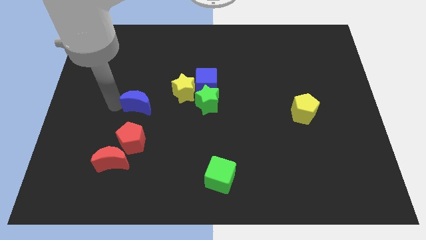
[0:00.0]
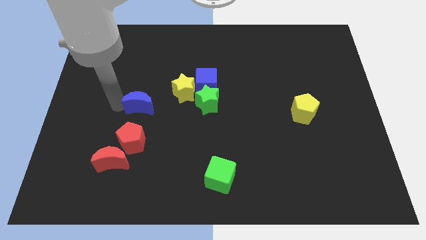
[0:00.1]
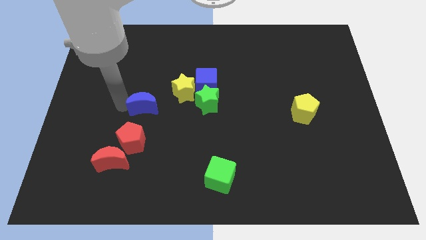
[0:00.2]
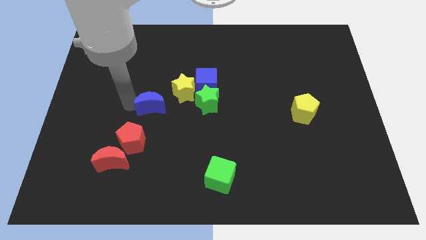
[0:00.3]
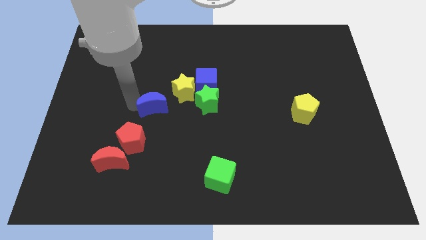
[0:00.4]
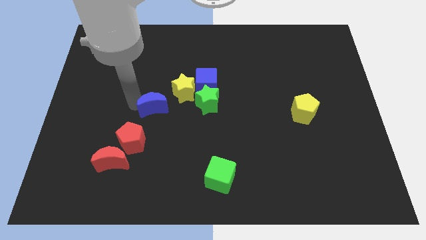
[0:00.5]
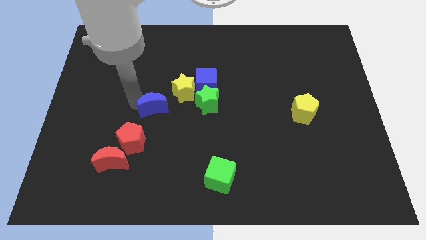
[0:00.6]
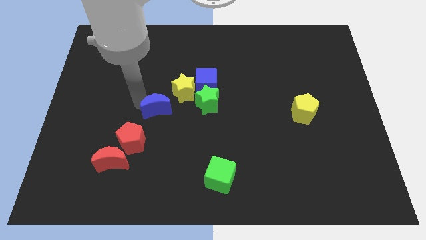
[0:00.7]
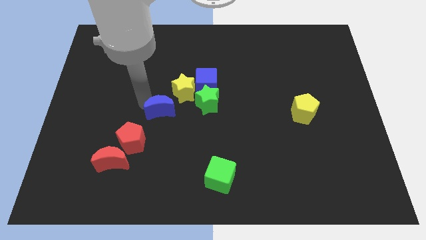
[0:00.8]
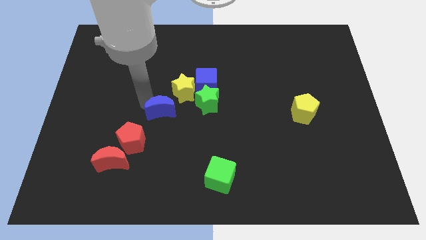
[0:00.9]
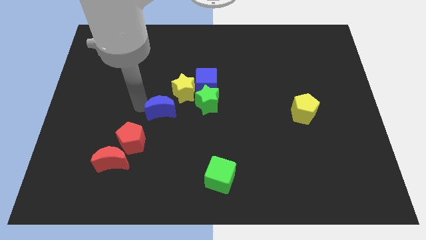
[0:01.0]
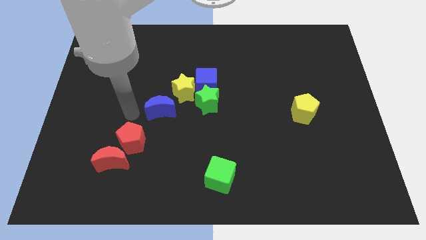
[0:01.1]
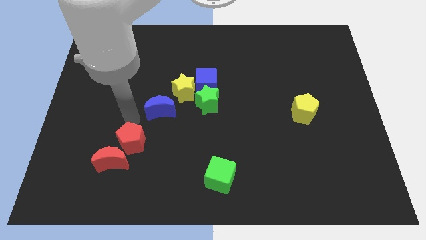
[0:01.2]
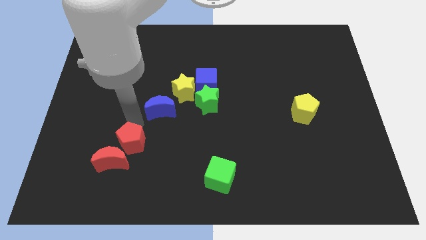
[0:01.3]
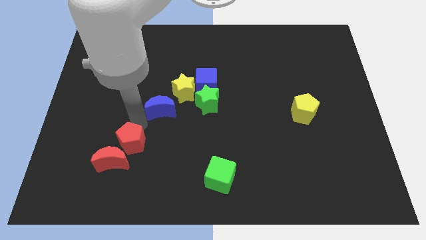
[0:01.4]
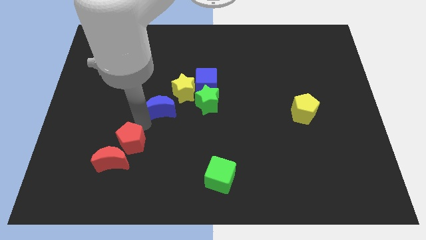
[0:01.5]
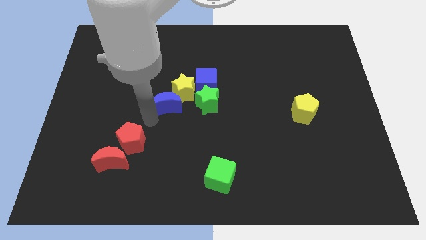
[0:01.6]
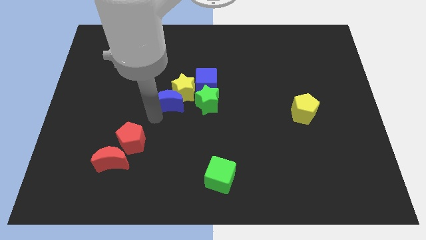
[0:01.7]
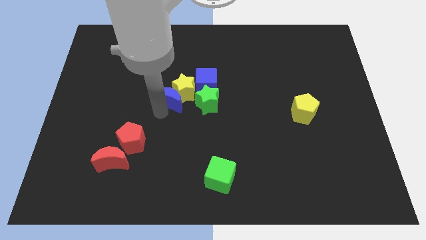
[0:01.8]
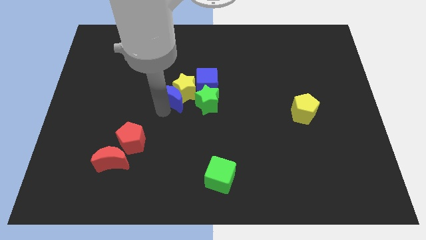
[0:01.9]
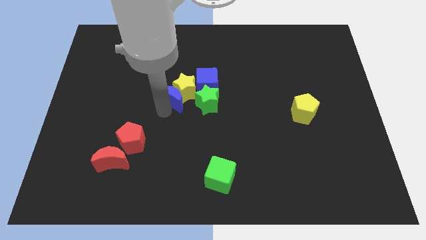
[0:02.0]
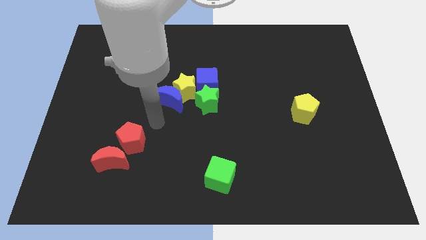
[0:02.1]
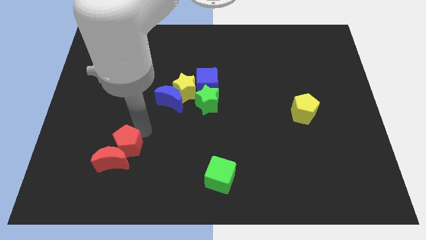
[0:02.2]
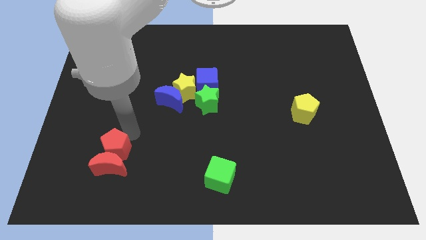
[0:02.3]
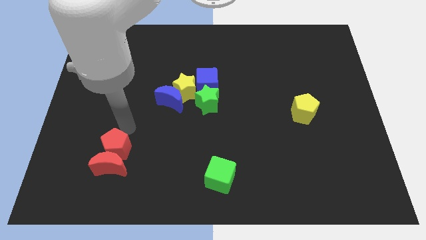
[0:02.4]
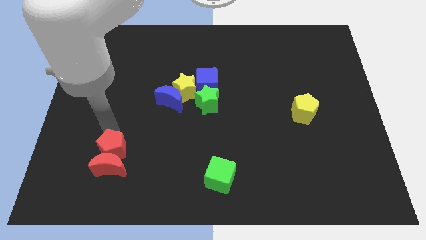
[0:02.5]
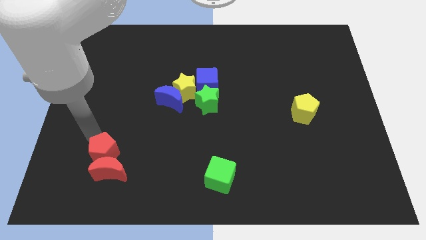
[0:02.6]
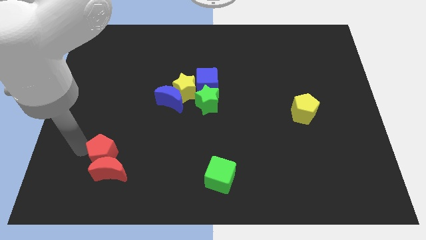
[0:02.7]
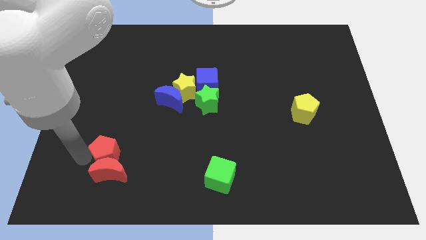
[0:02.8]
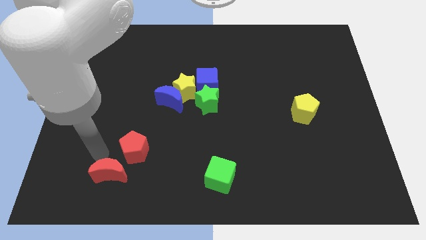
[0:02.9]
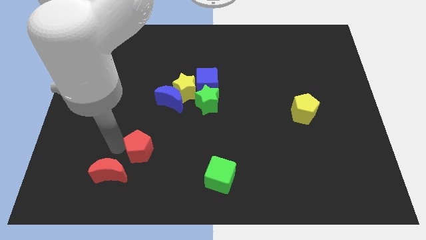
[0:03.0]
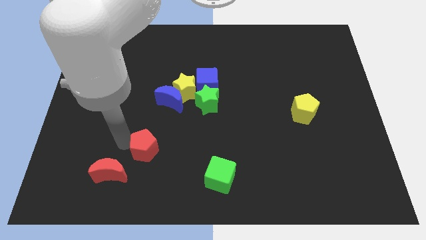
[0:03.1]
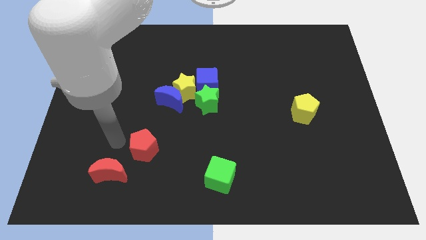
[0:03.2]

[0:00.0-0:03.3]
drag the blue moon into a yellow star

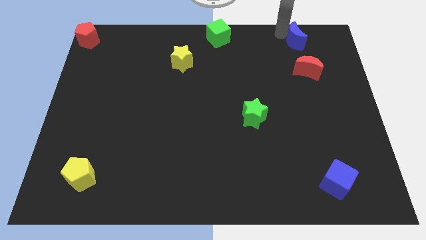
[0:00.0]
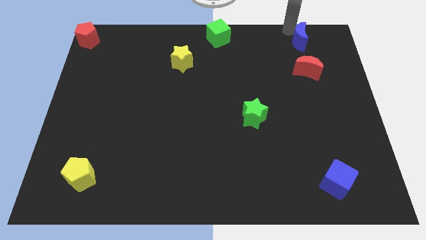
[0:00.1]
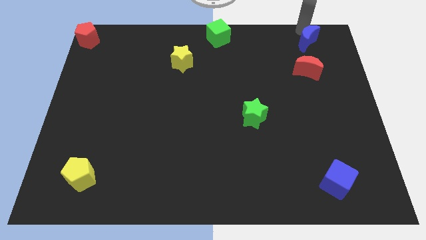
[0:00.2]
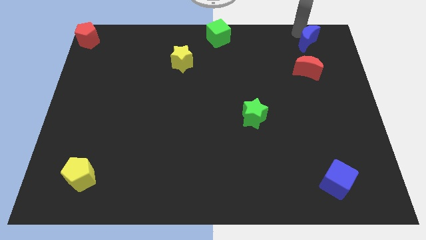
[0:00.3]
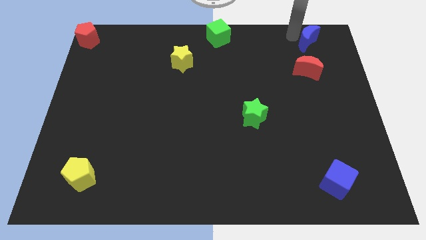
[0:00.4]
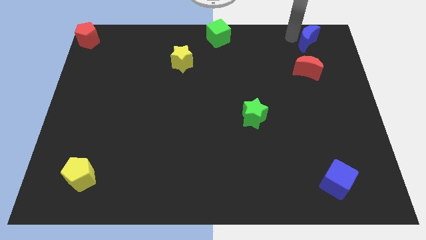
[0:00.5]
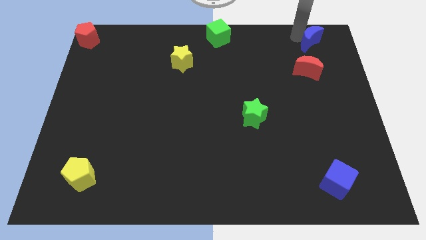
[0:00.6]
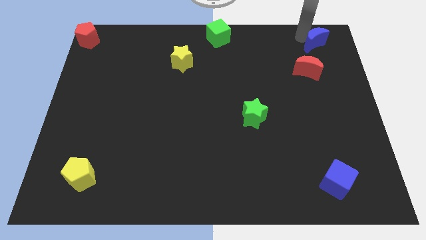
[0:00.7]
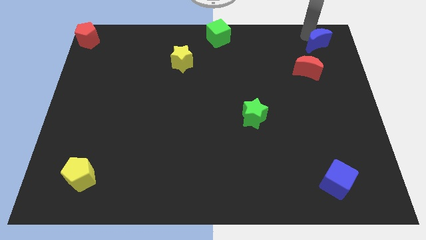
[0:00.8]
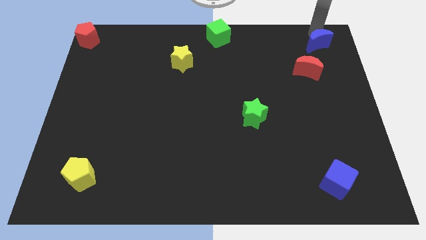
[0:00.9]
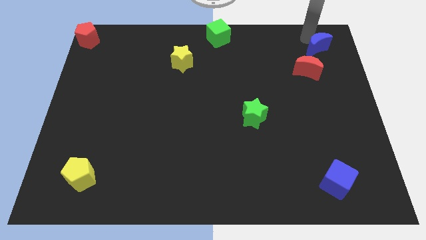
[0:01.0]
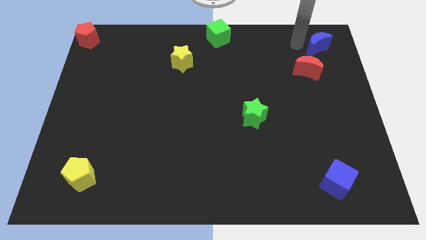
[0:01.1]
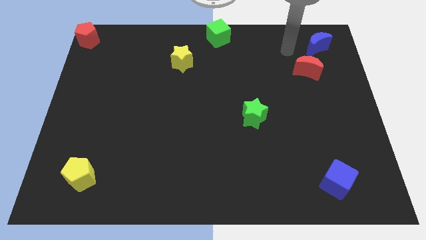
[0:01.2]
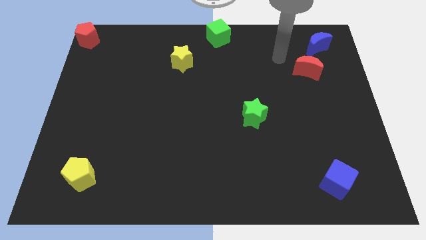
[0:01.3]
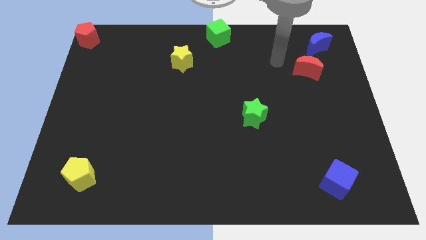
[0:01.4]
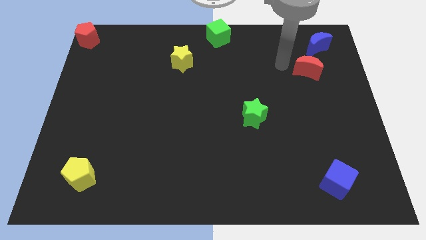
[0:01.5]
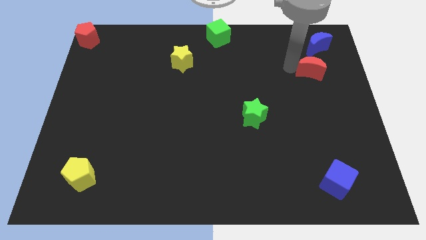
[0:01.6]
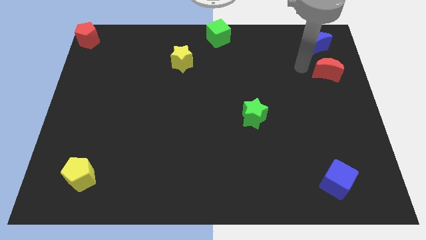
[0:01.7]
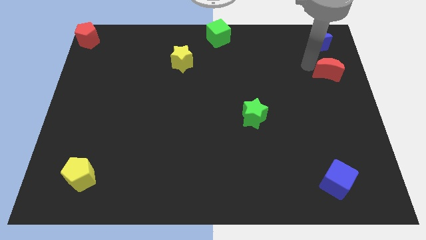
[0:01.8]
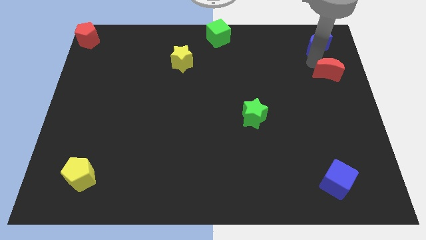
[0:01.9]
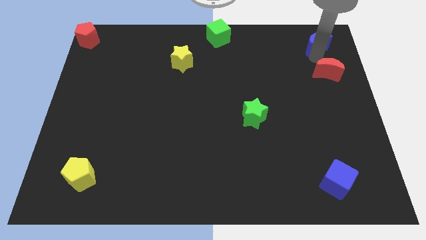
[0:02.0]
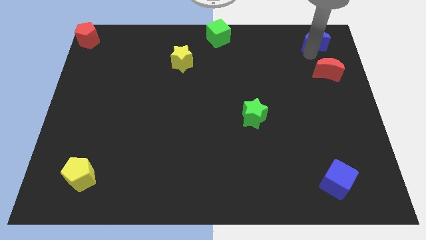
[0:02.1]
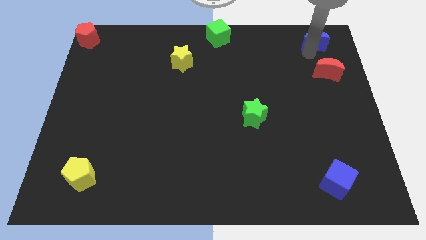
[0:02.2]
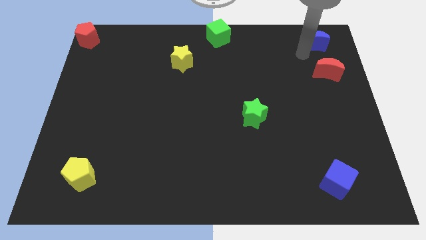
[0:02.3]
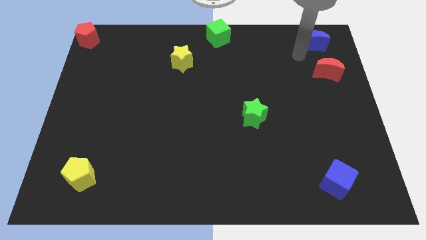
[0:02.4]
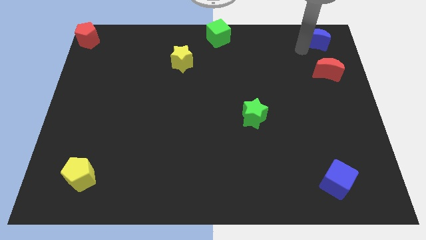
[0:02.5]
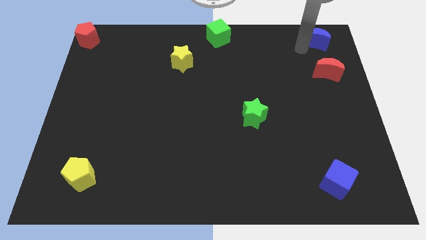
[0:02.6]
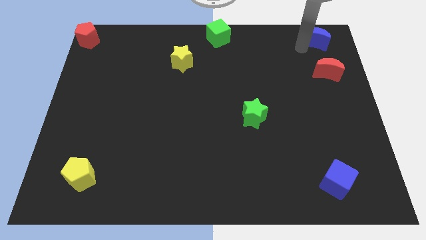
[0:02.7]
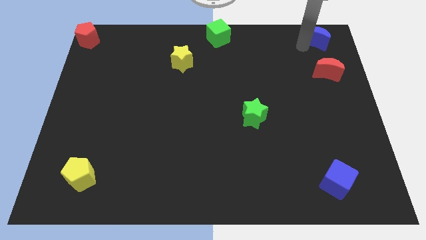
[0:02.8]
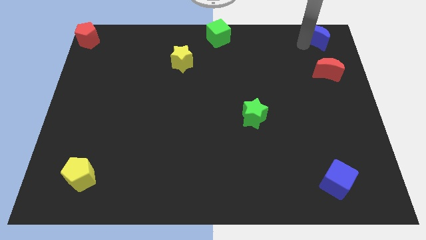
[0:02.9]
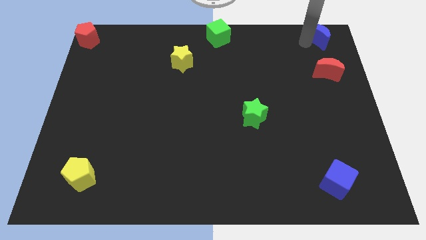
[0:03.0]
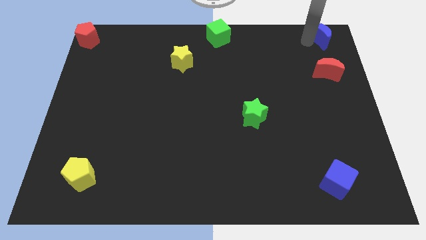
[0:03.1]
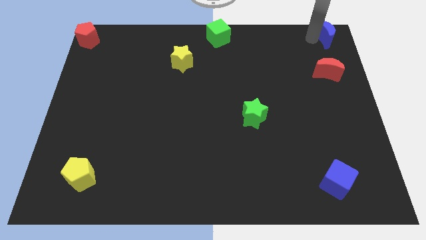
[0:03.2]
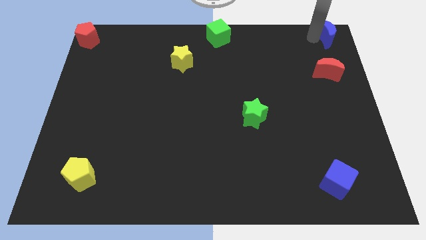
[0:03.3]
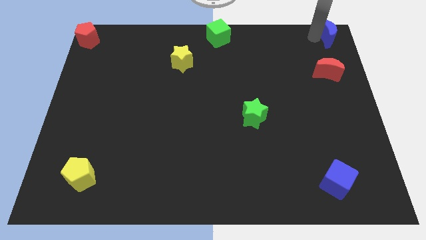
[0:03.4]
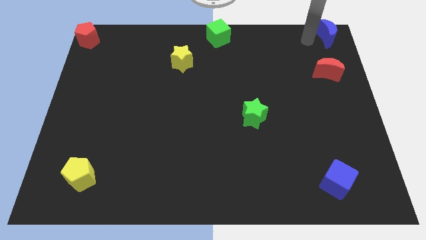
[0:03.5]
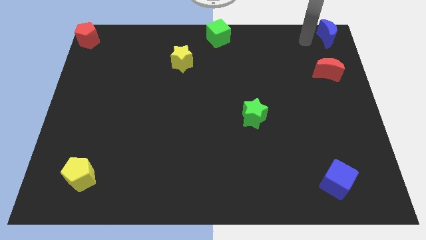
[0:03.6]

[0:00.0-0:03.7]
move the blue crescent and red crescent to the top right side of the board

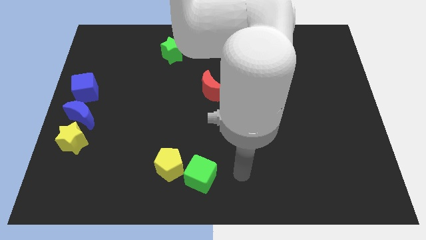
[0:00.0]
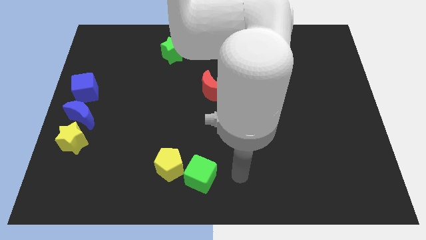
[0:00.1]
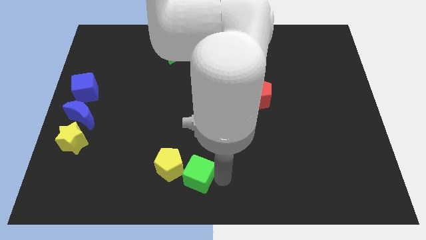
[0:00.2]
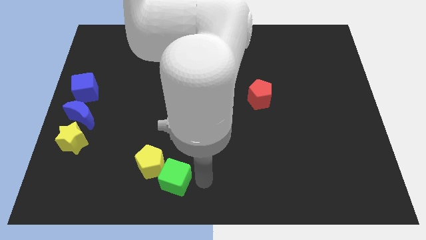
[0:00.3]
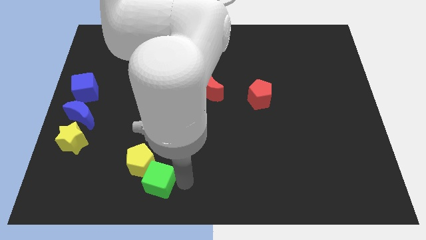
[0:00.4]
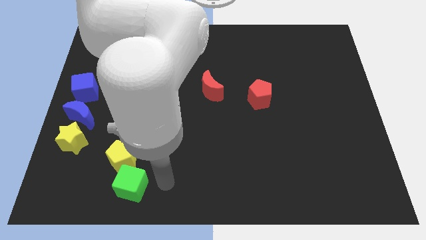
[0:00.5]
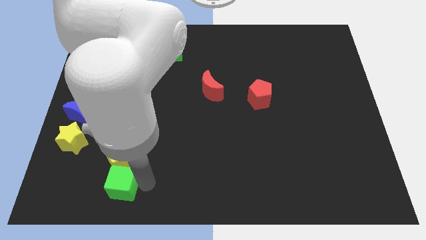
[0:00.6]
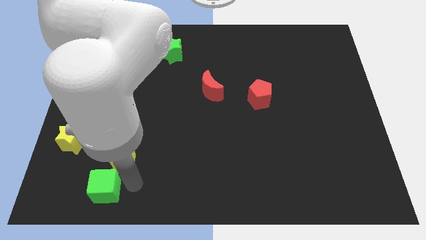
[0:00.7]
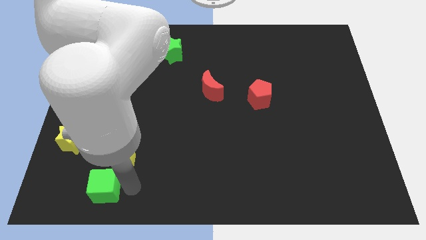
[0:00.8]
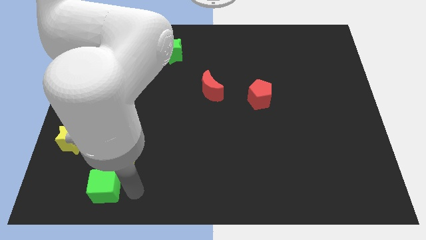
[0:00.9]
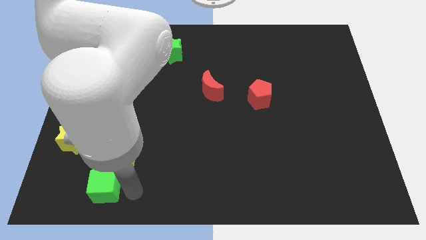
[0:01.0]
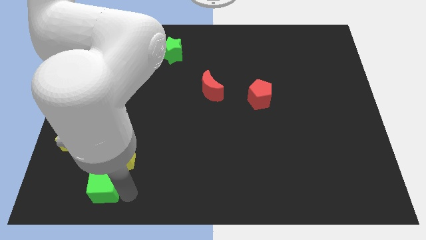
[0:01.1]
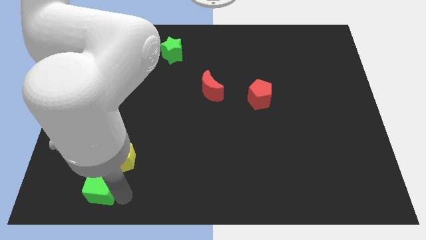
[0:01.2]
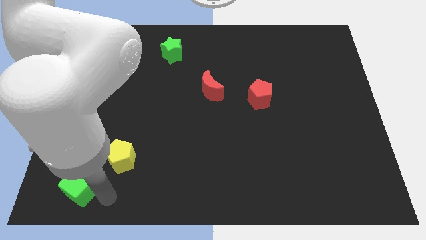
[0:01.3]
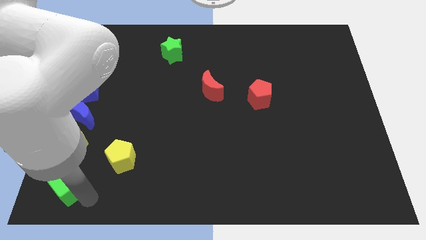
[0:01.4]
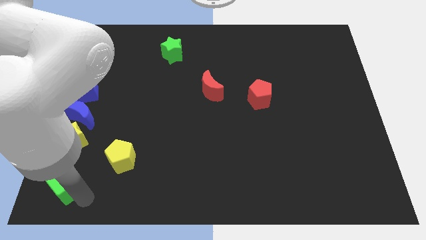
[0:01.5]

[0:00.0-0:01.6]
push the green cube to the bottom of the yellow star

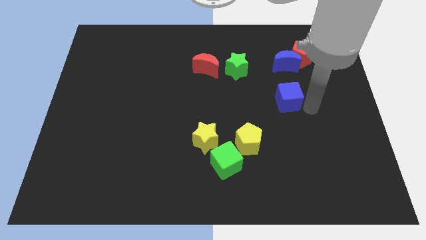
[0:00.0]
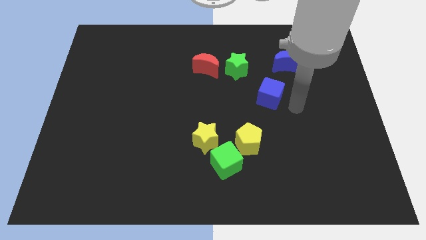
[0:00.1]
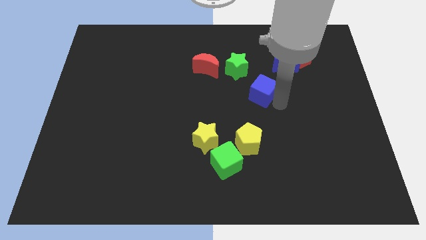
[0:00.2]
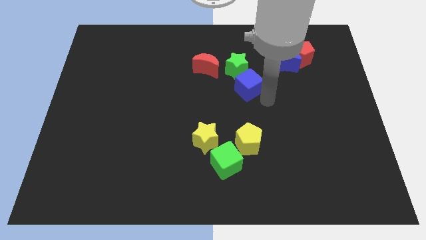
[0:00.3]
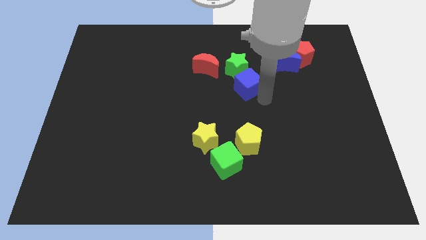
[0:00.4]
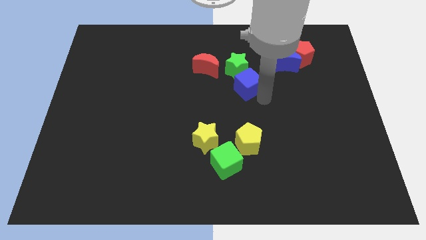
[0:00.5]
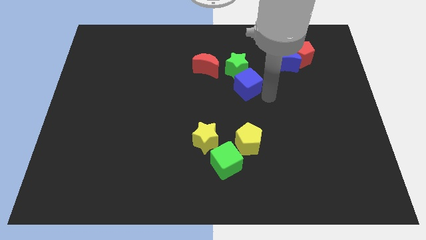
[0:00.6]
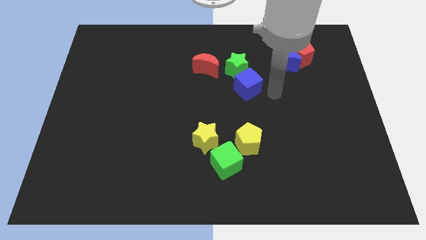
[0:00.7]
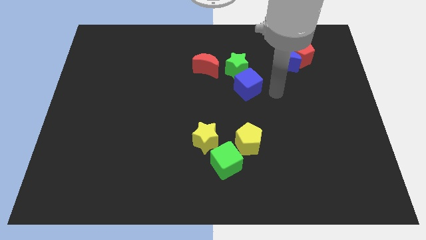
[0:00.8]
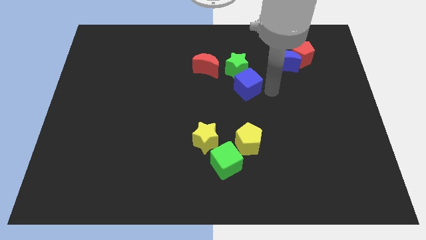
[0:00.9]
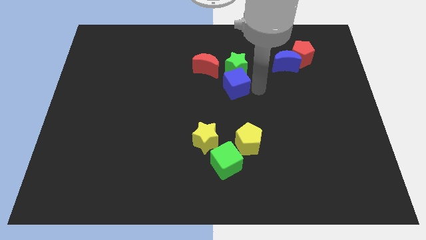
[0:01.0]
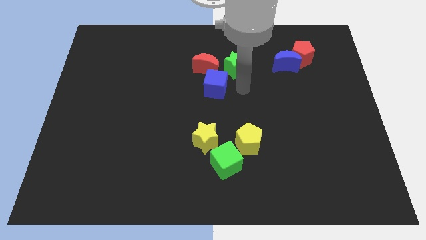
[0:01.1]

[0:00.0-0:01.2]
push the blue cube to the bottom of the green star
